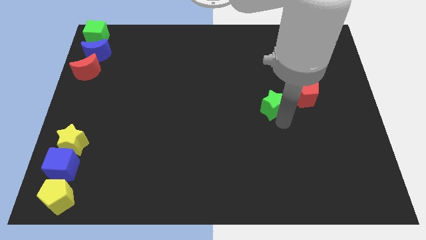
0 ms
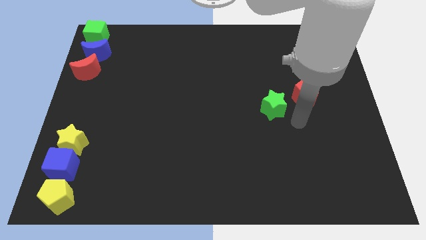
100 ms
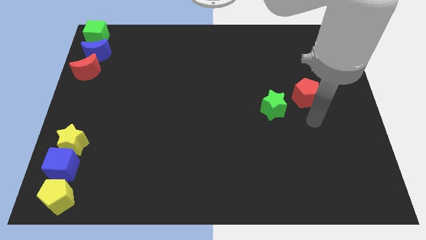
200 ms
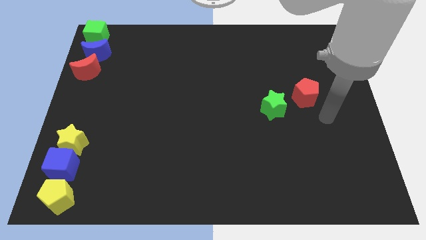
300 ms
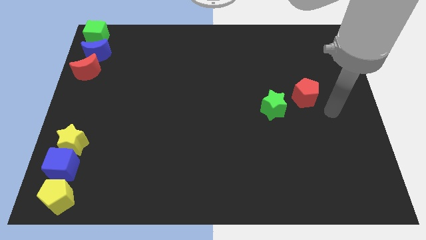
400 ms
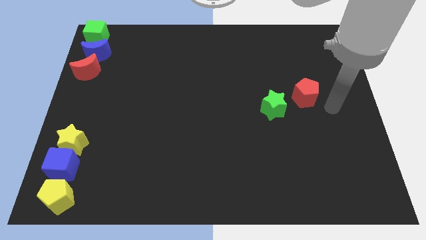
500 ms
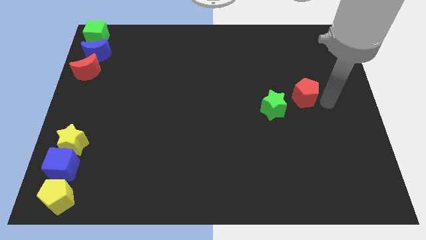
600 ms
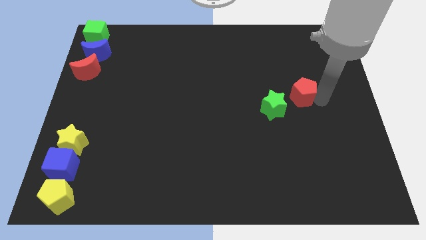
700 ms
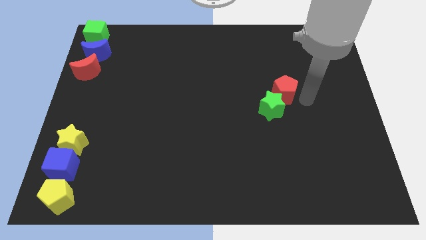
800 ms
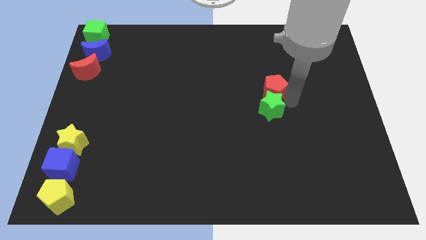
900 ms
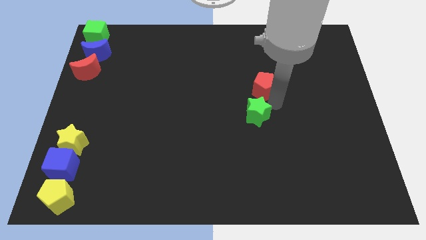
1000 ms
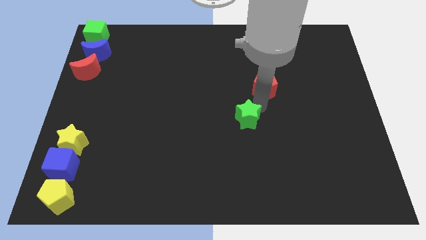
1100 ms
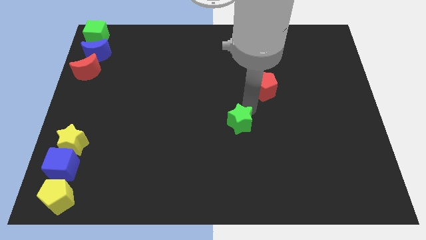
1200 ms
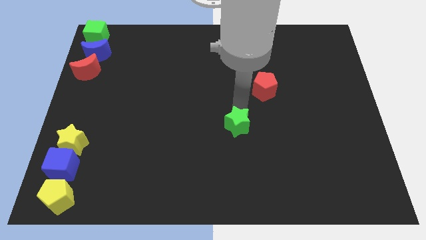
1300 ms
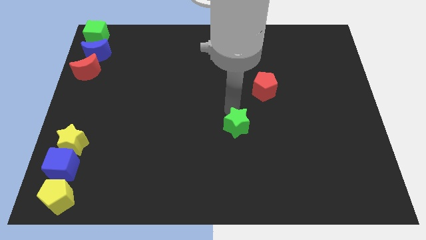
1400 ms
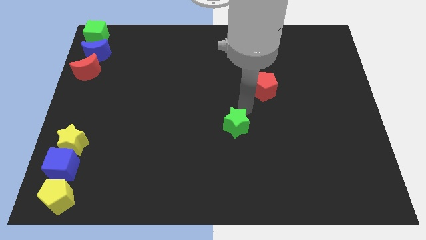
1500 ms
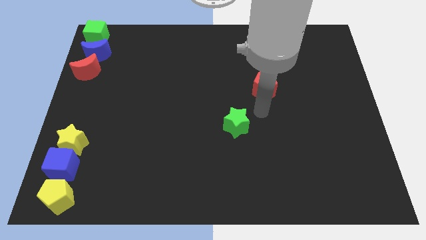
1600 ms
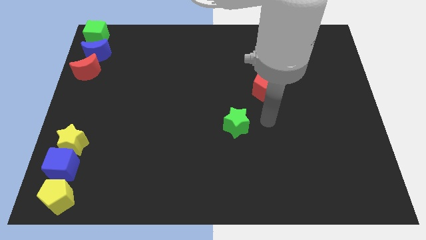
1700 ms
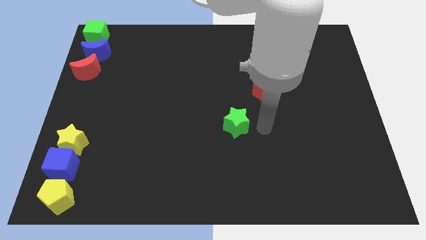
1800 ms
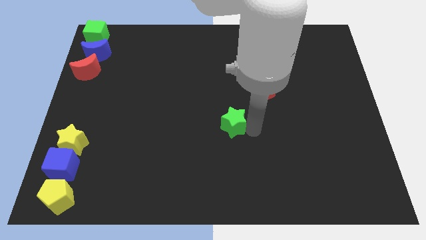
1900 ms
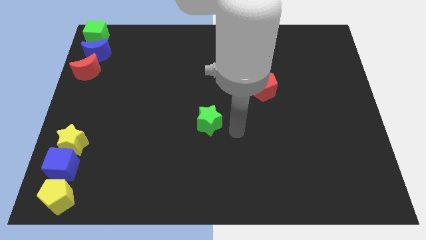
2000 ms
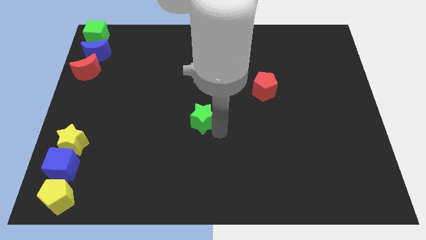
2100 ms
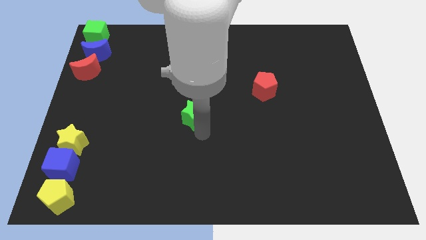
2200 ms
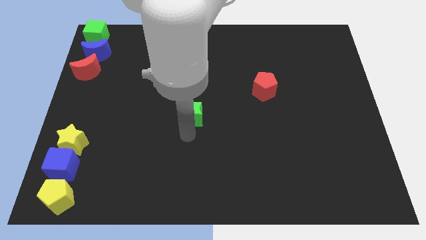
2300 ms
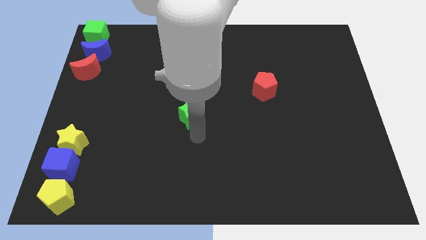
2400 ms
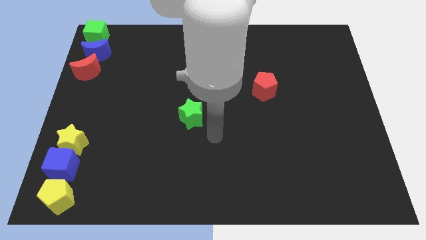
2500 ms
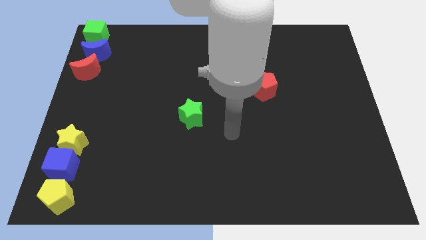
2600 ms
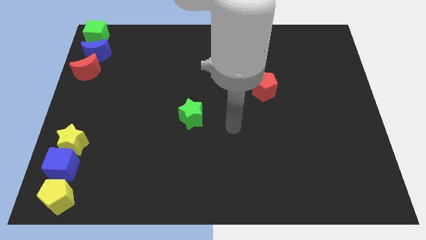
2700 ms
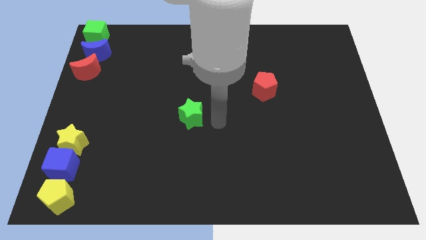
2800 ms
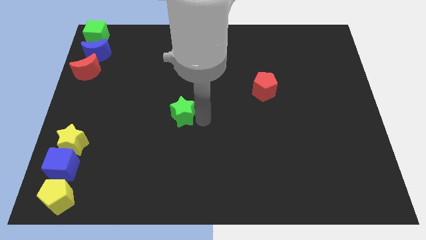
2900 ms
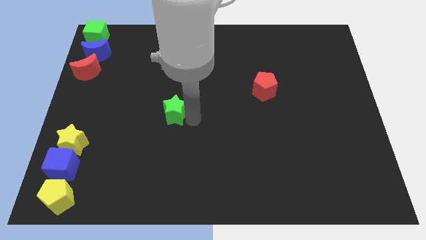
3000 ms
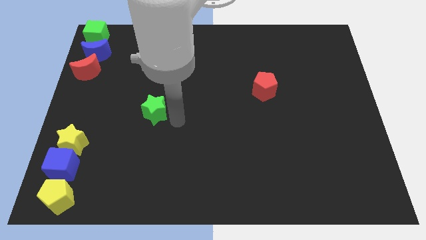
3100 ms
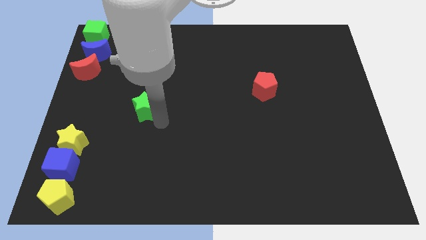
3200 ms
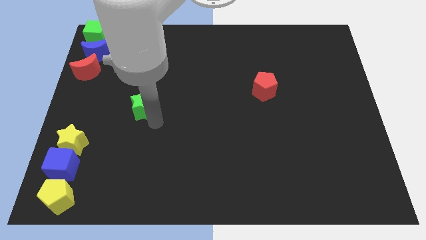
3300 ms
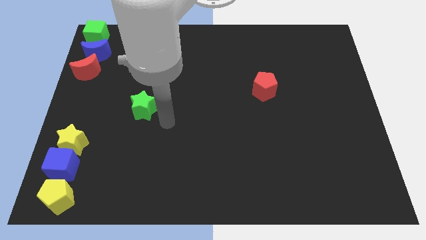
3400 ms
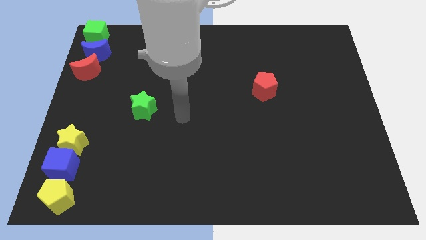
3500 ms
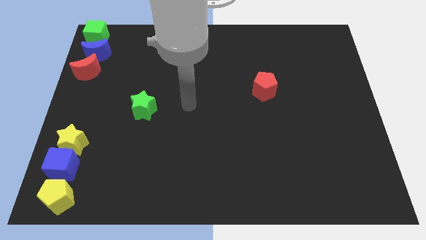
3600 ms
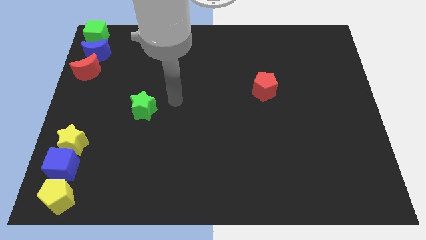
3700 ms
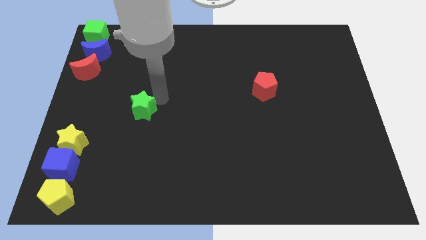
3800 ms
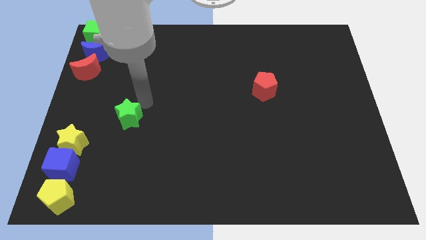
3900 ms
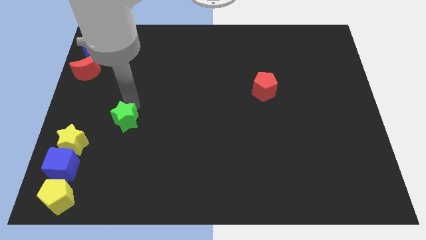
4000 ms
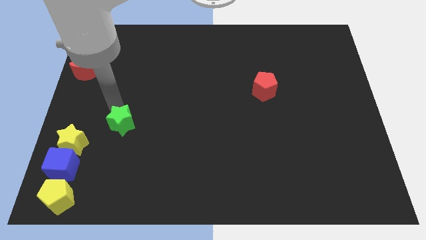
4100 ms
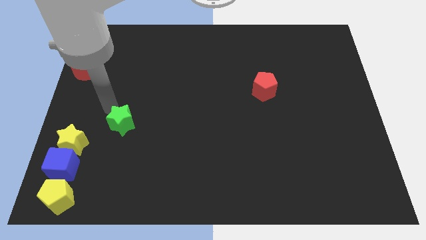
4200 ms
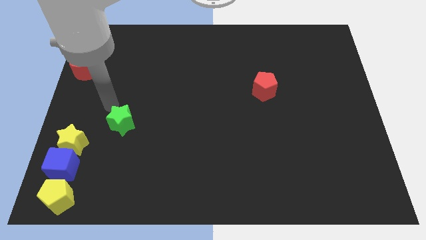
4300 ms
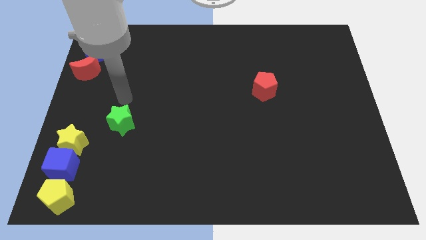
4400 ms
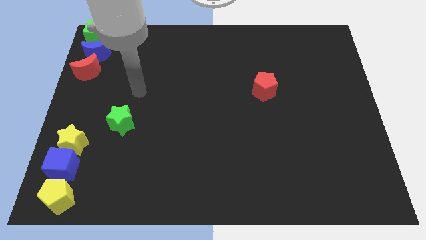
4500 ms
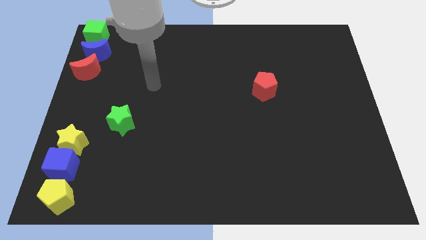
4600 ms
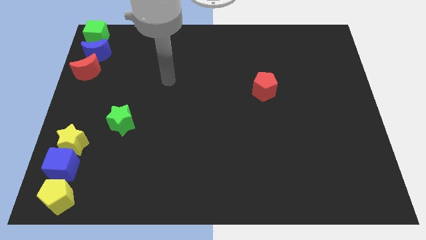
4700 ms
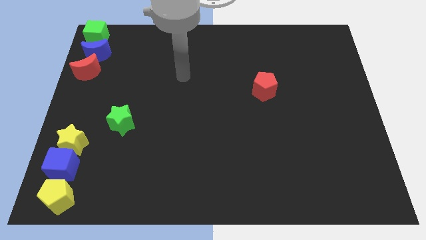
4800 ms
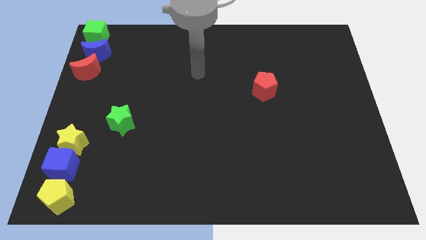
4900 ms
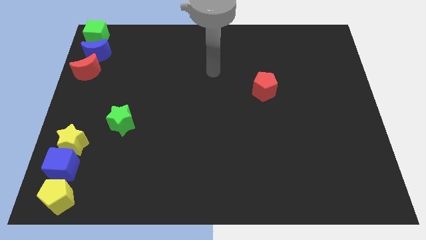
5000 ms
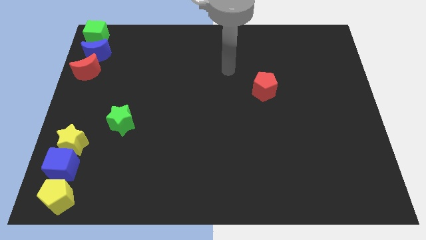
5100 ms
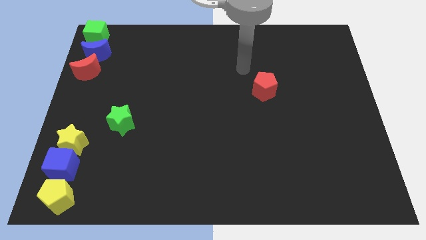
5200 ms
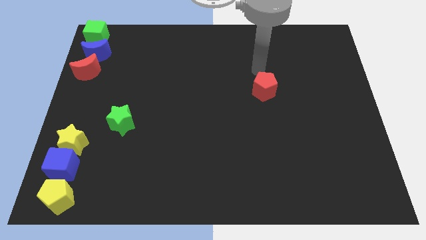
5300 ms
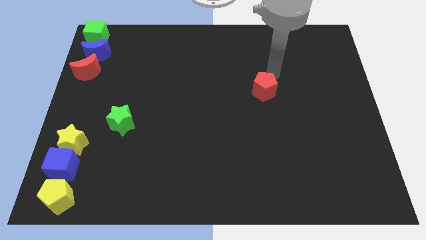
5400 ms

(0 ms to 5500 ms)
move the green star to the left side of board

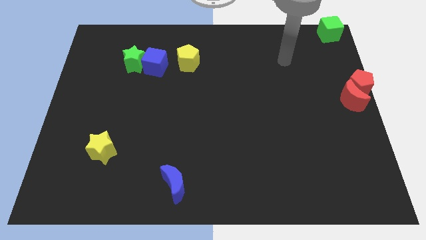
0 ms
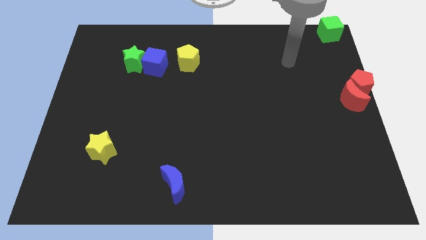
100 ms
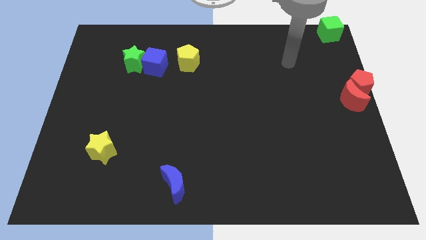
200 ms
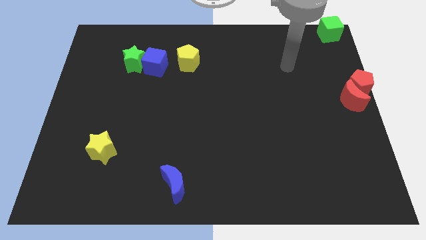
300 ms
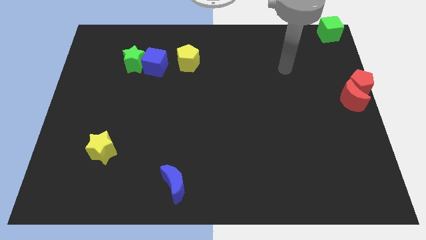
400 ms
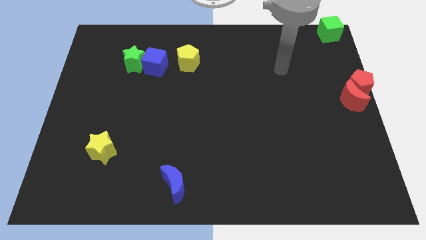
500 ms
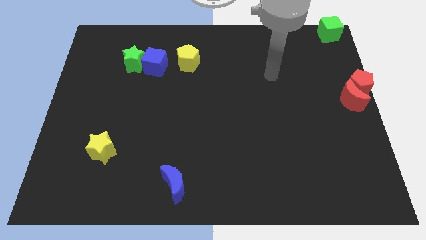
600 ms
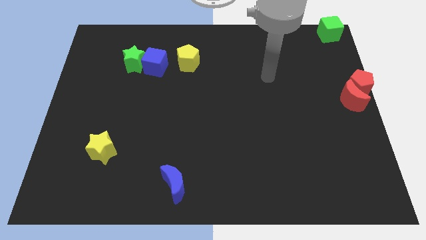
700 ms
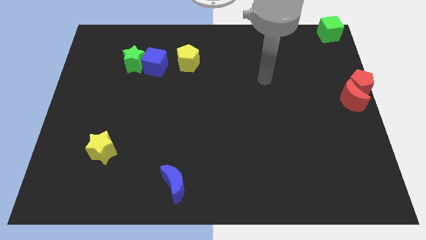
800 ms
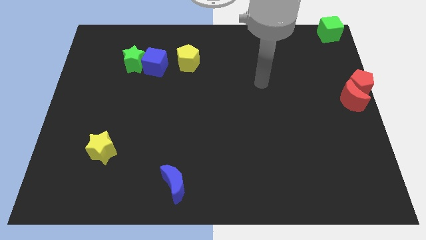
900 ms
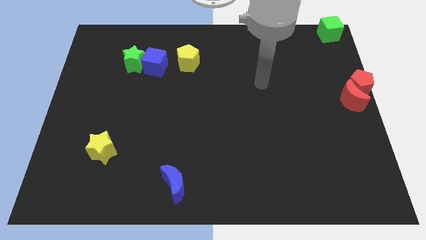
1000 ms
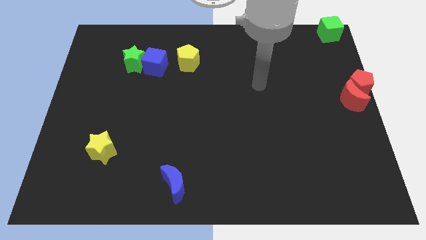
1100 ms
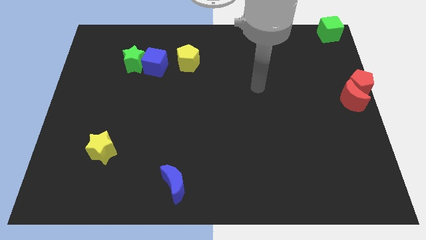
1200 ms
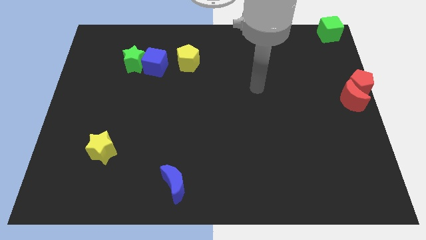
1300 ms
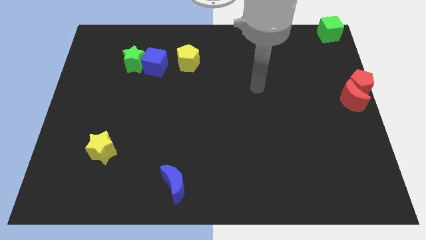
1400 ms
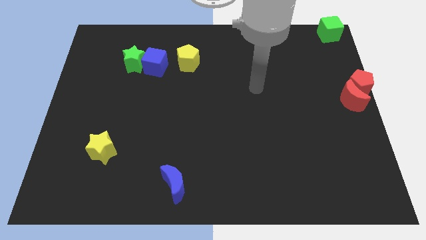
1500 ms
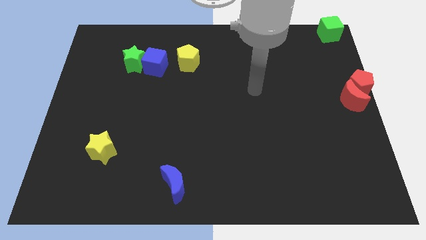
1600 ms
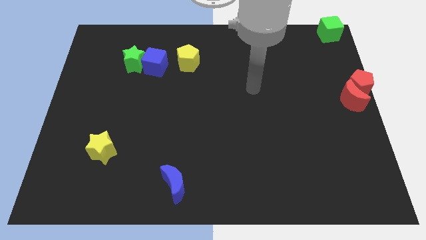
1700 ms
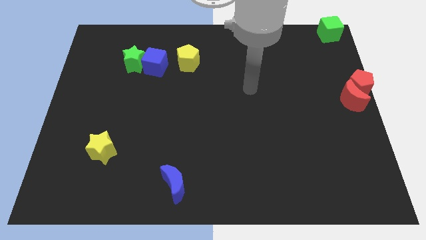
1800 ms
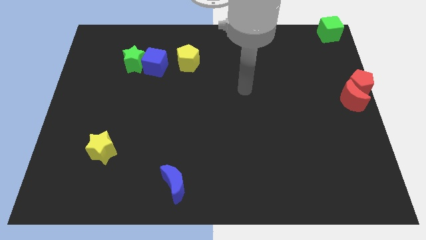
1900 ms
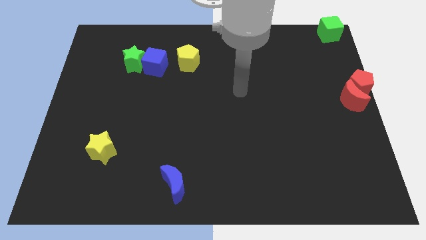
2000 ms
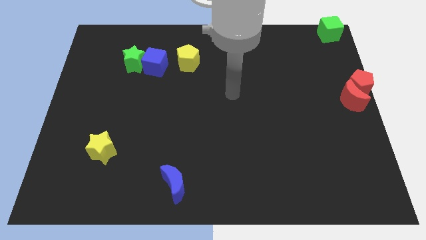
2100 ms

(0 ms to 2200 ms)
place your arm towards the center

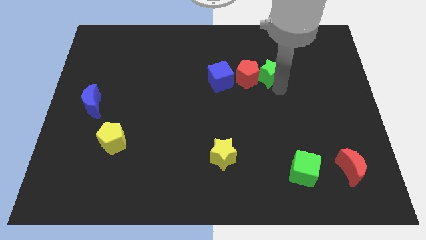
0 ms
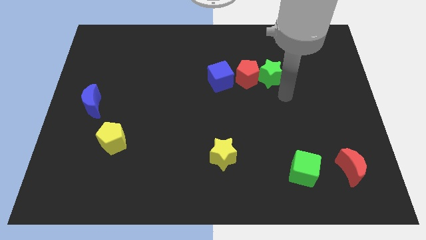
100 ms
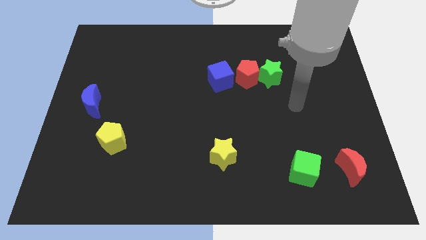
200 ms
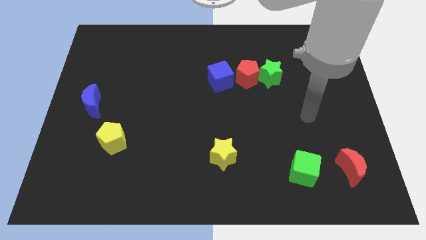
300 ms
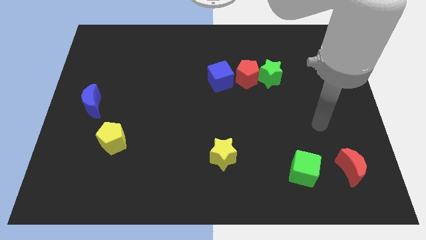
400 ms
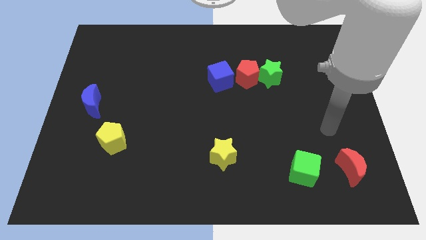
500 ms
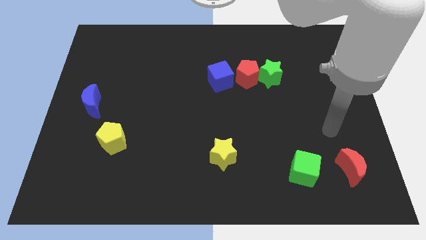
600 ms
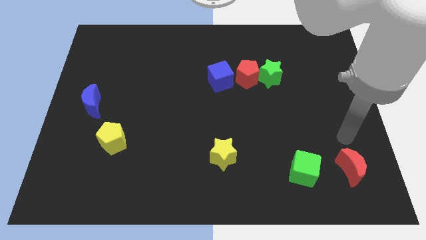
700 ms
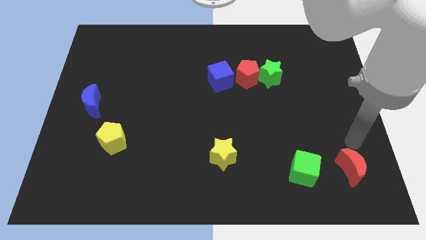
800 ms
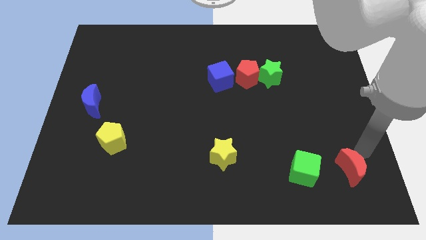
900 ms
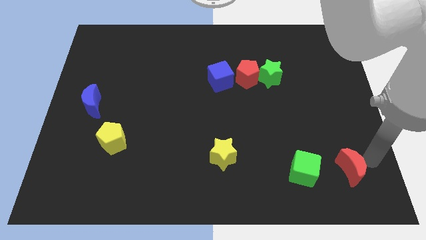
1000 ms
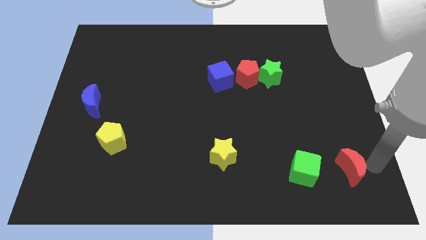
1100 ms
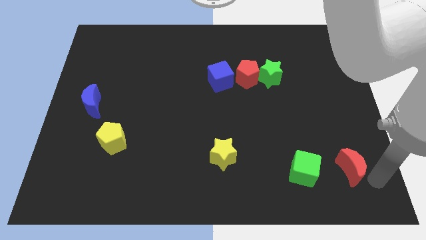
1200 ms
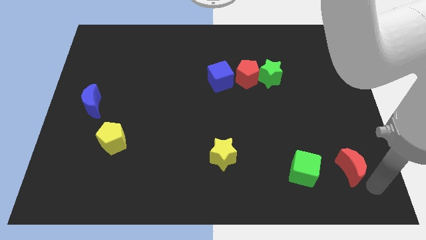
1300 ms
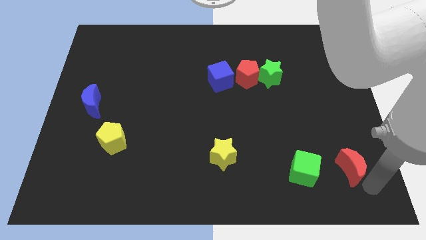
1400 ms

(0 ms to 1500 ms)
move your hand towards the red crescent
